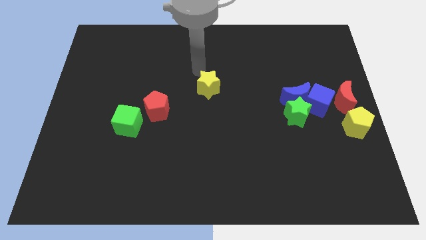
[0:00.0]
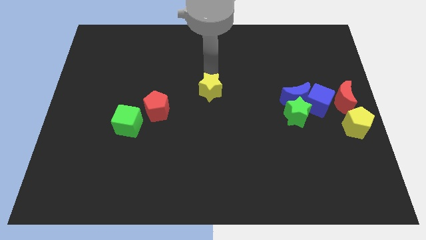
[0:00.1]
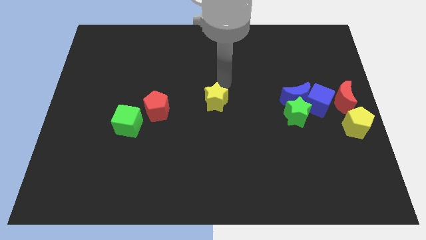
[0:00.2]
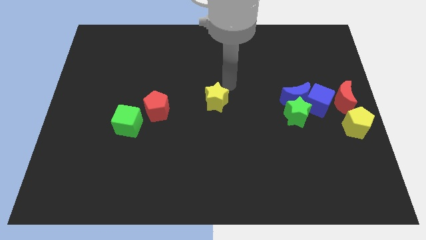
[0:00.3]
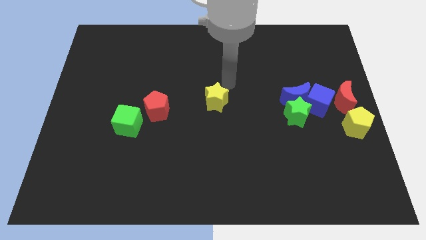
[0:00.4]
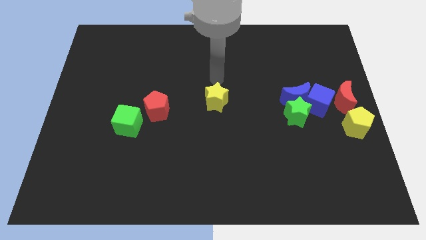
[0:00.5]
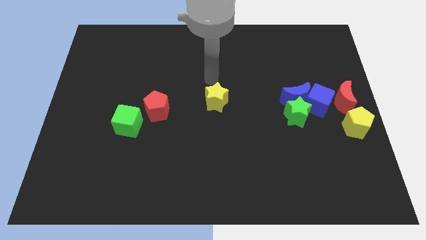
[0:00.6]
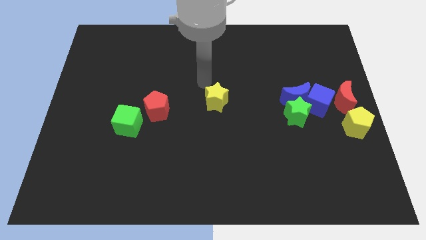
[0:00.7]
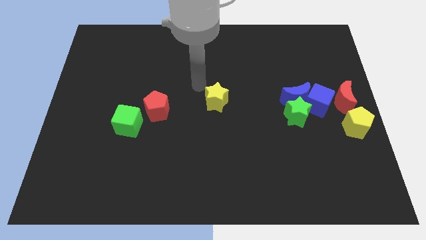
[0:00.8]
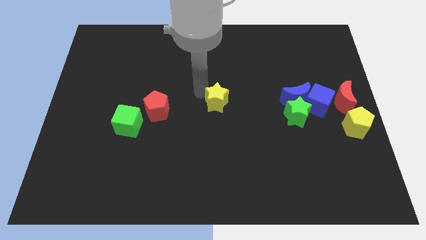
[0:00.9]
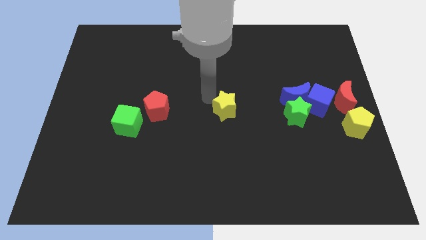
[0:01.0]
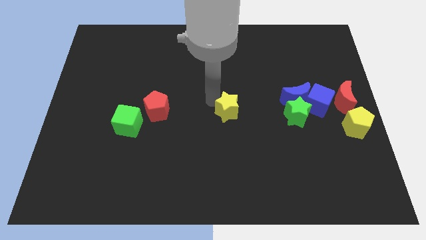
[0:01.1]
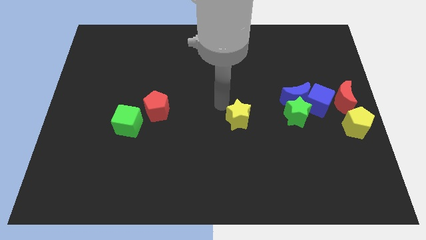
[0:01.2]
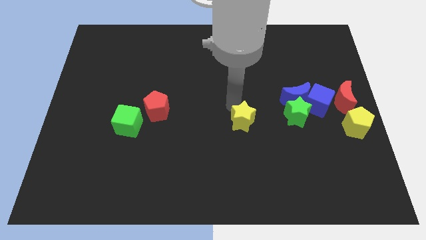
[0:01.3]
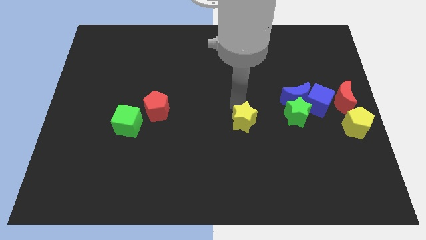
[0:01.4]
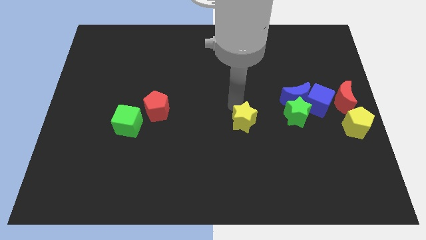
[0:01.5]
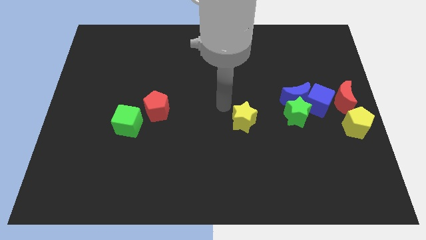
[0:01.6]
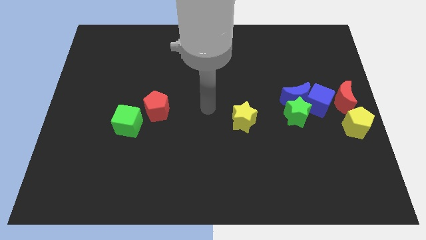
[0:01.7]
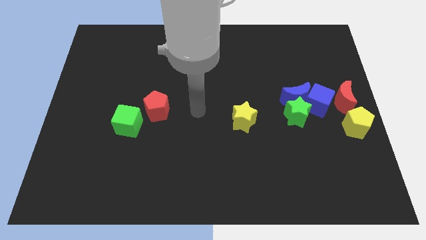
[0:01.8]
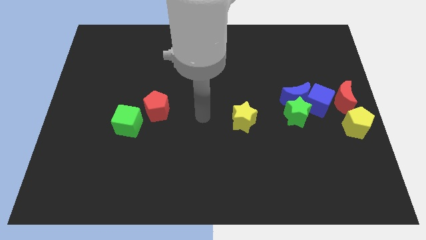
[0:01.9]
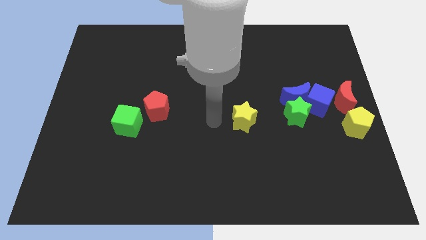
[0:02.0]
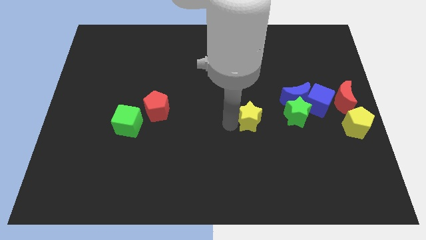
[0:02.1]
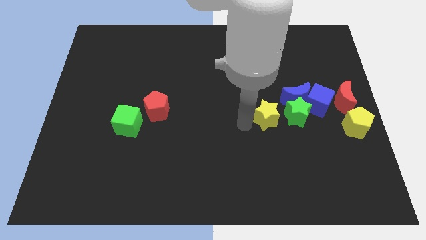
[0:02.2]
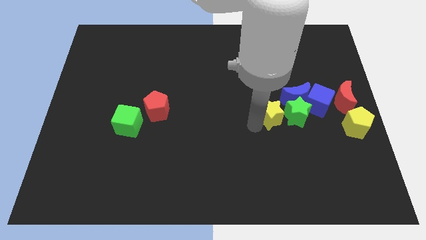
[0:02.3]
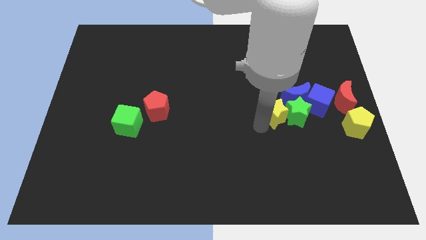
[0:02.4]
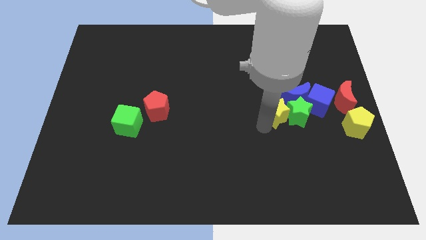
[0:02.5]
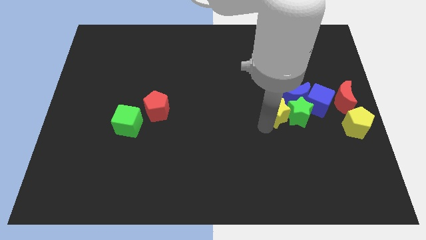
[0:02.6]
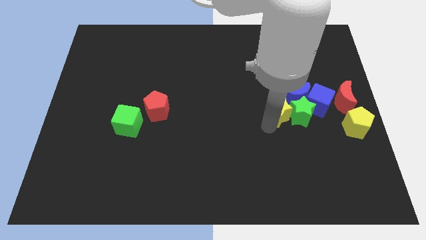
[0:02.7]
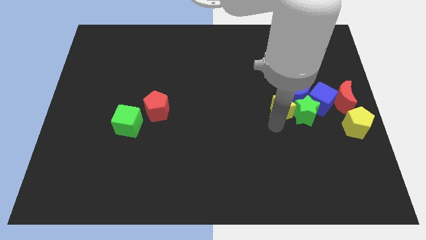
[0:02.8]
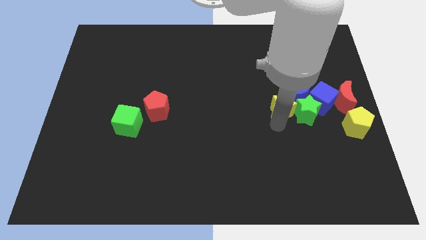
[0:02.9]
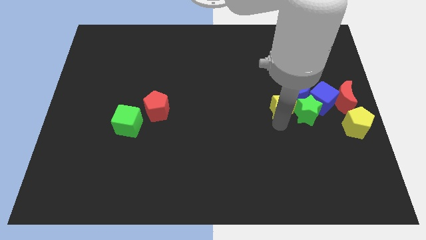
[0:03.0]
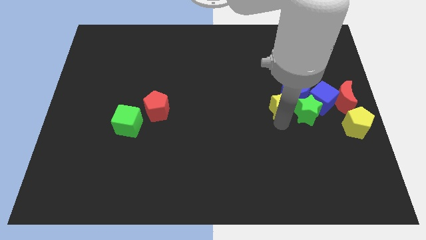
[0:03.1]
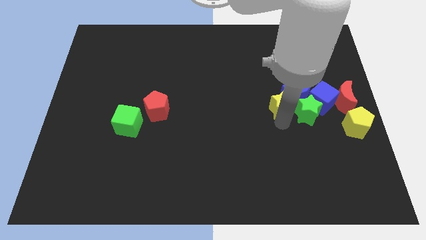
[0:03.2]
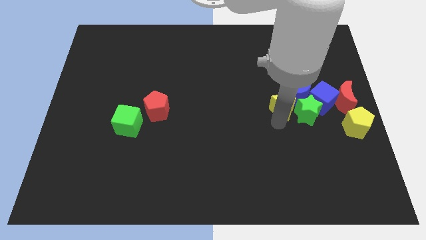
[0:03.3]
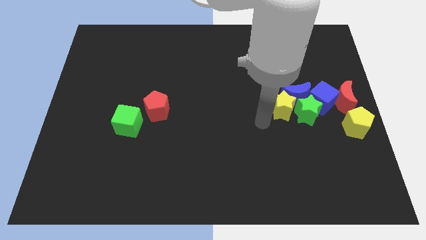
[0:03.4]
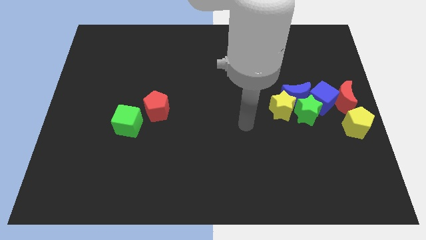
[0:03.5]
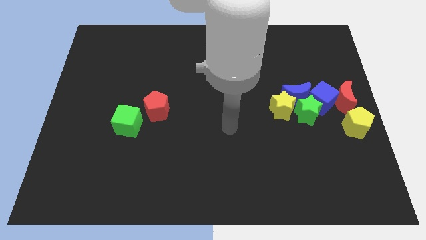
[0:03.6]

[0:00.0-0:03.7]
place the yellow star next to the green star

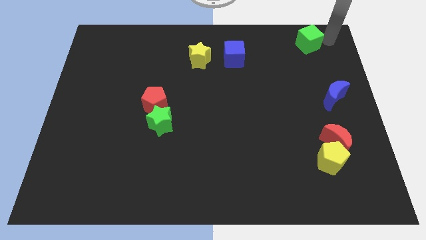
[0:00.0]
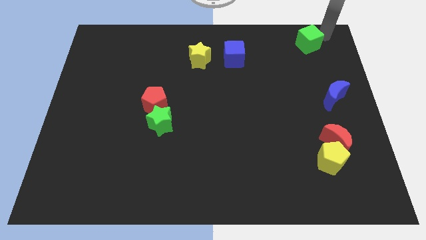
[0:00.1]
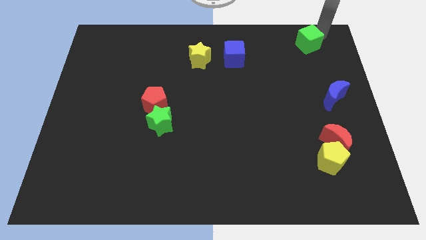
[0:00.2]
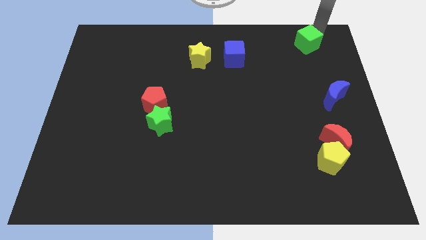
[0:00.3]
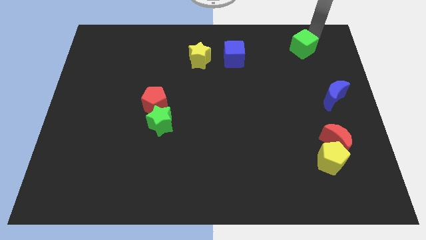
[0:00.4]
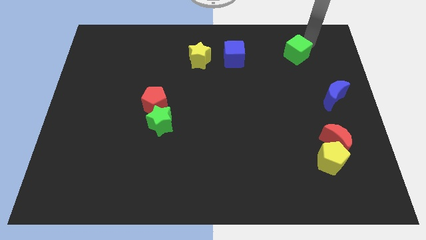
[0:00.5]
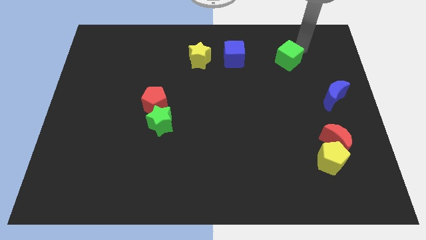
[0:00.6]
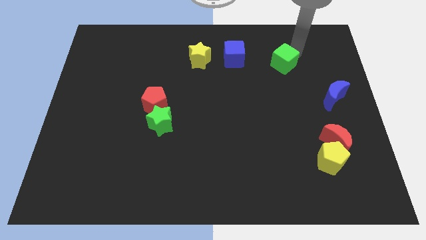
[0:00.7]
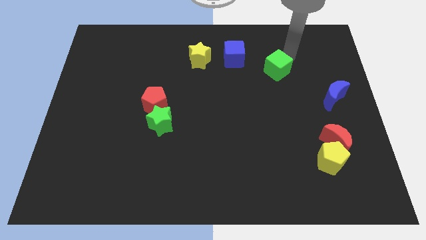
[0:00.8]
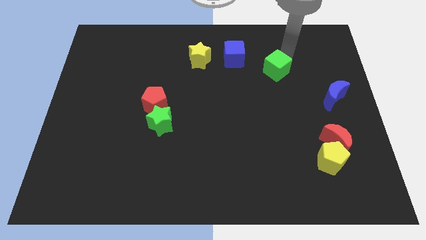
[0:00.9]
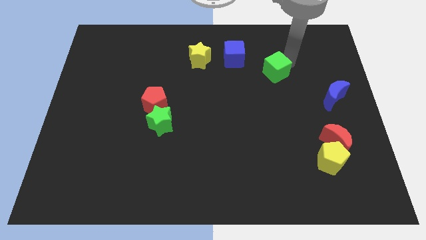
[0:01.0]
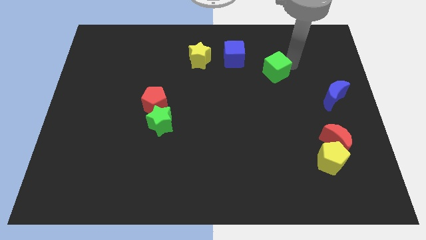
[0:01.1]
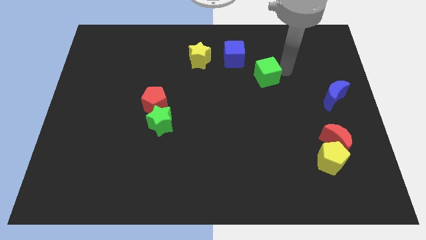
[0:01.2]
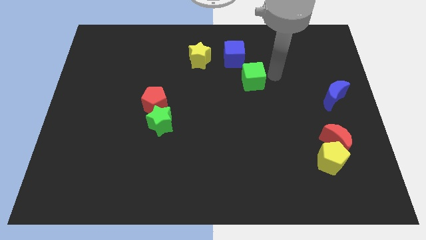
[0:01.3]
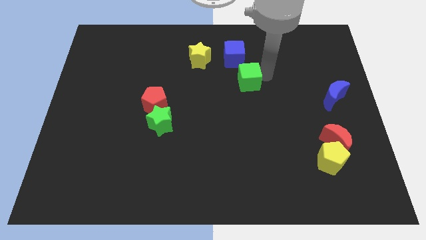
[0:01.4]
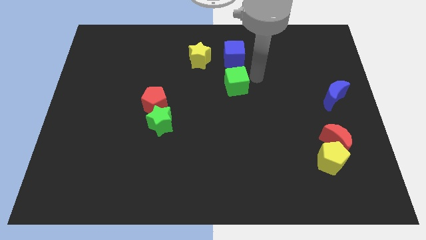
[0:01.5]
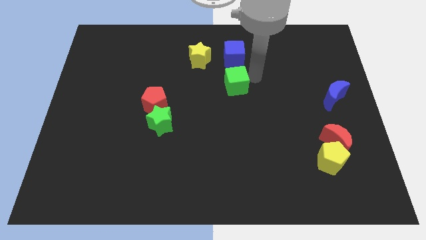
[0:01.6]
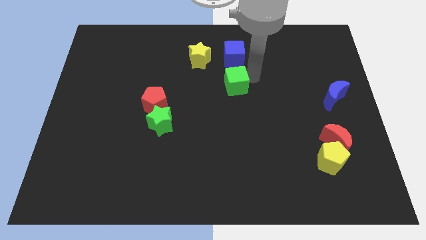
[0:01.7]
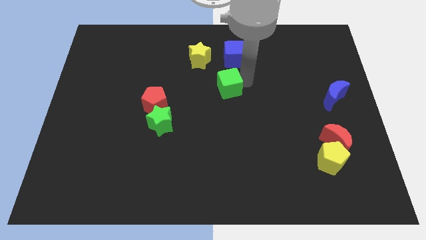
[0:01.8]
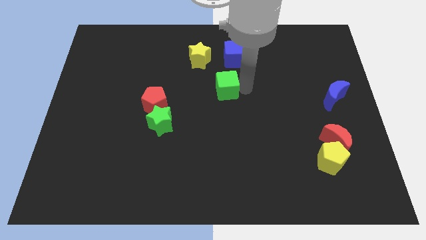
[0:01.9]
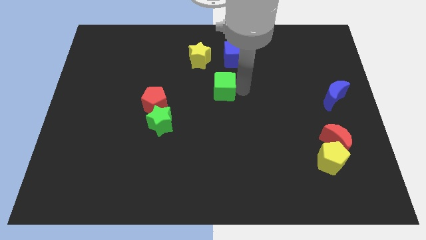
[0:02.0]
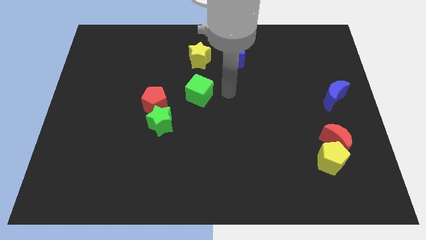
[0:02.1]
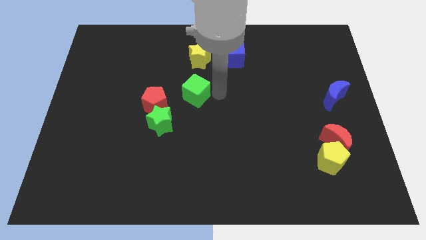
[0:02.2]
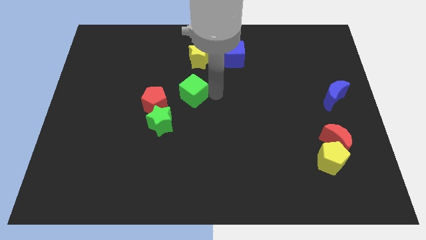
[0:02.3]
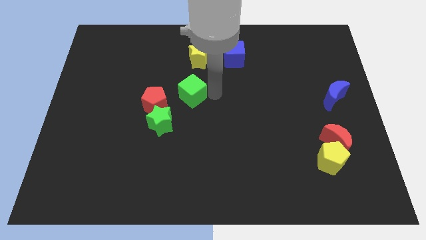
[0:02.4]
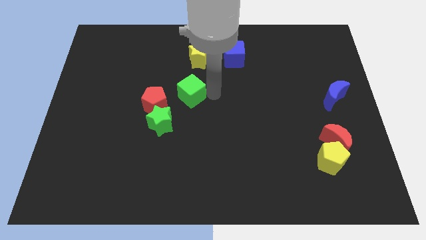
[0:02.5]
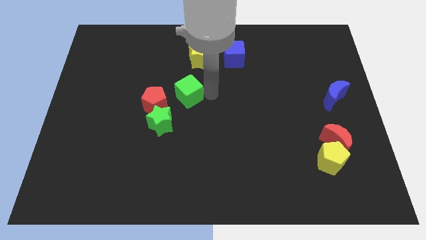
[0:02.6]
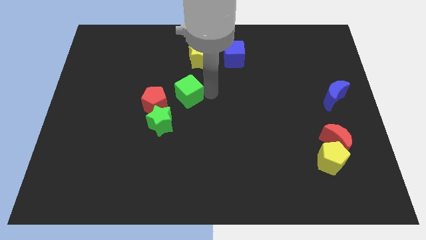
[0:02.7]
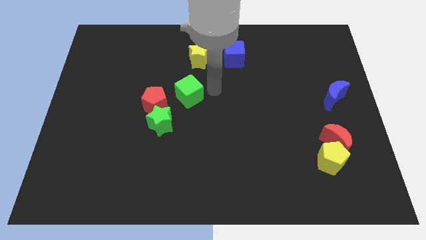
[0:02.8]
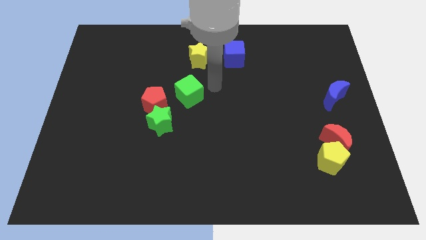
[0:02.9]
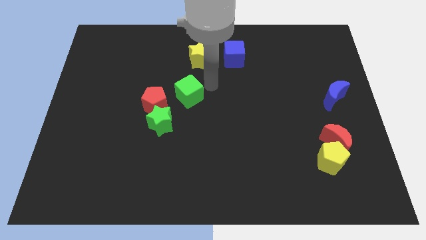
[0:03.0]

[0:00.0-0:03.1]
place the green cube below the yellow star

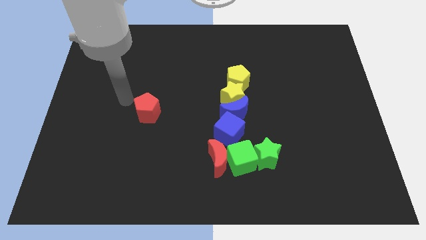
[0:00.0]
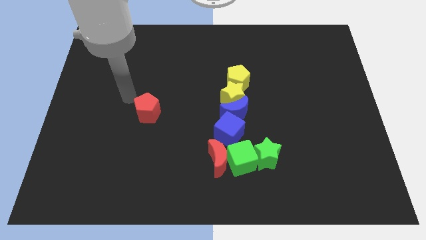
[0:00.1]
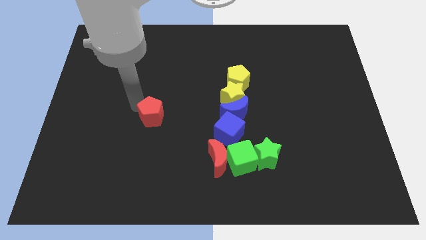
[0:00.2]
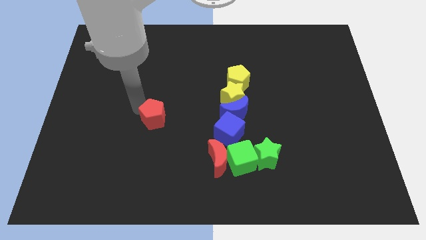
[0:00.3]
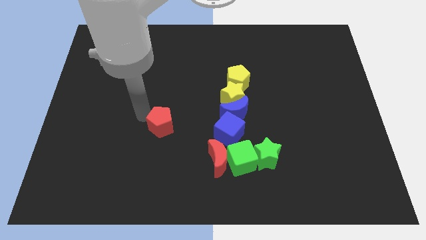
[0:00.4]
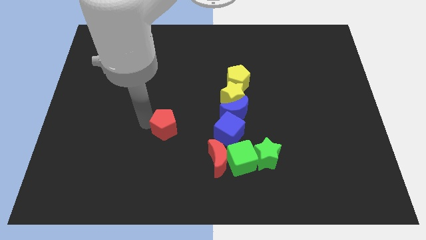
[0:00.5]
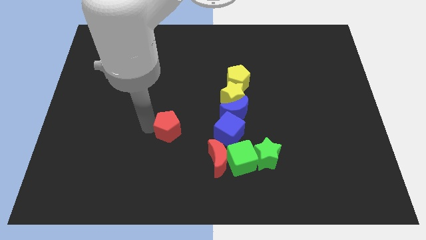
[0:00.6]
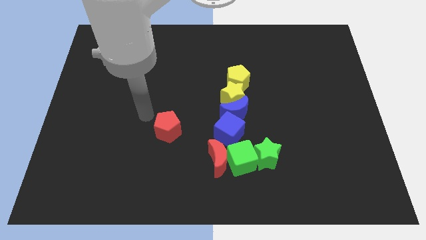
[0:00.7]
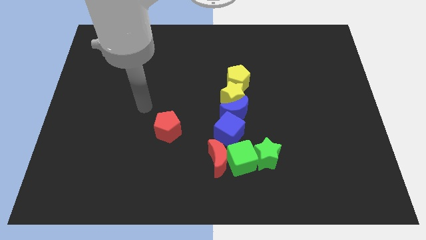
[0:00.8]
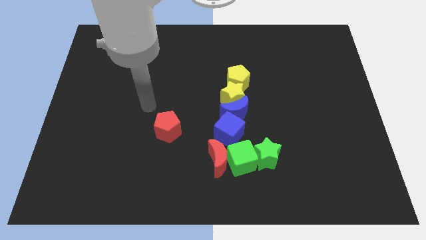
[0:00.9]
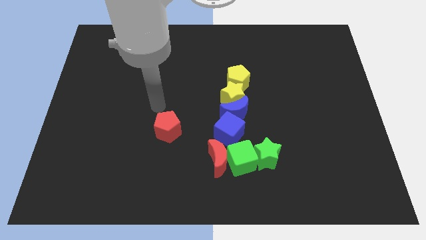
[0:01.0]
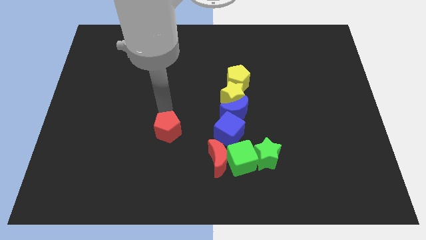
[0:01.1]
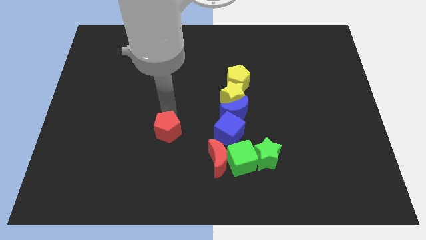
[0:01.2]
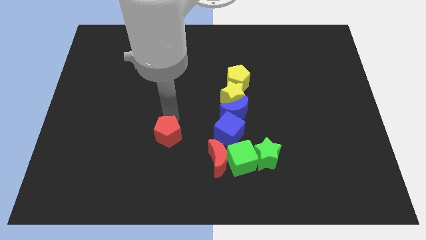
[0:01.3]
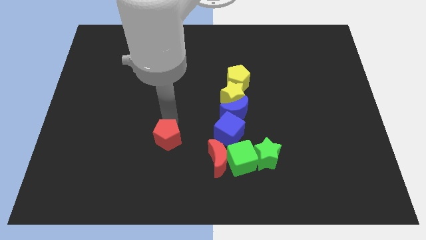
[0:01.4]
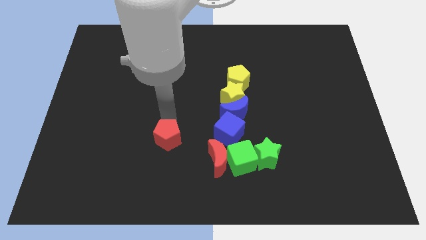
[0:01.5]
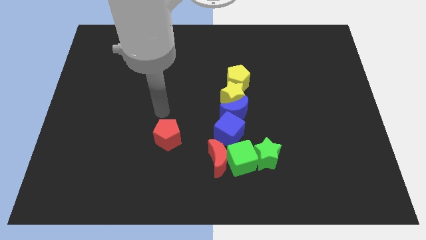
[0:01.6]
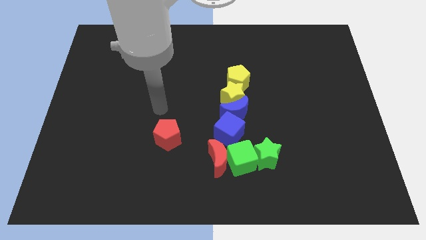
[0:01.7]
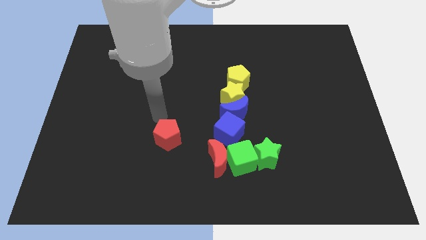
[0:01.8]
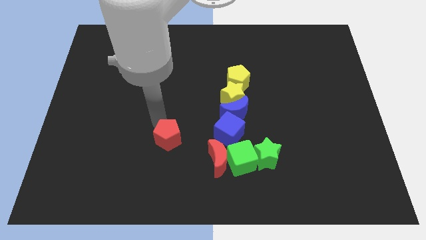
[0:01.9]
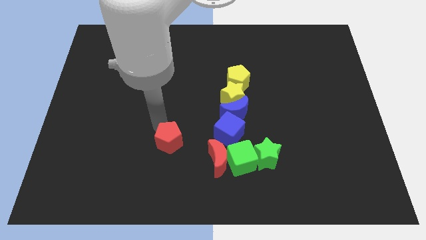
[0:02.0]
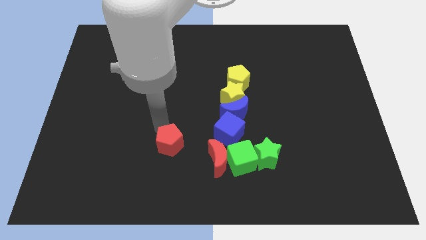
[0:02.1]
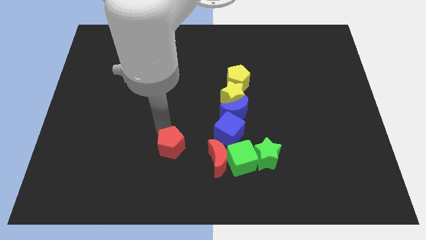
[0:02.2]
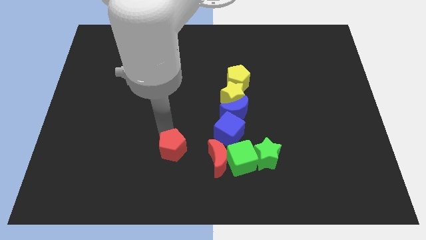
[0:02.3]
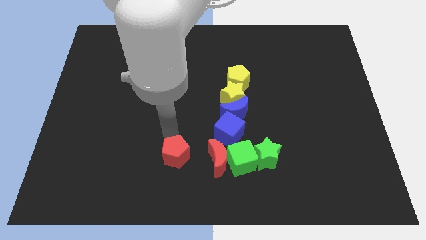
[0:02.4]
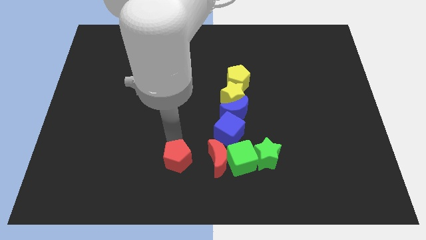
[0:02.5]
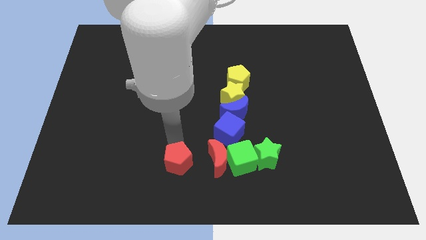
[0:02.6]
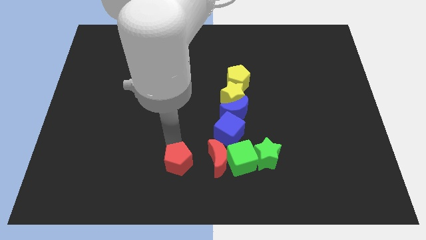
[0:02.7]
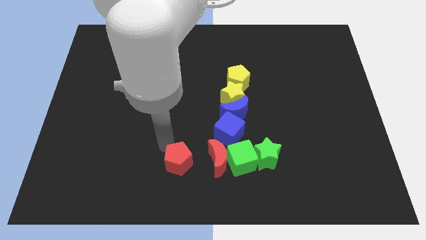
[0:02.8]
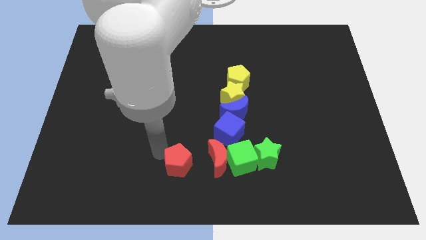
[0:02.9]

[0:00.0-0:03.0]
move the red crescent to the left of red moon
